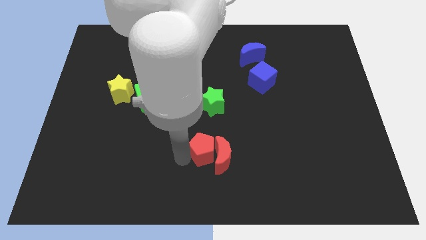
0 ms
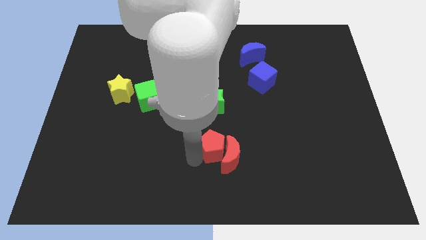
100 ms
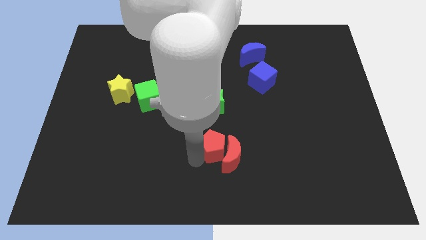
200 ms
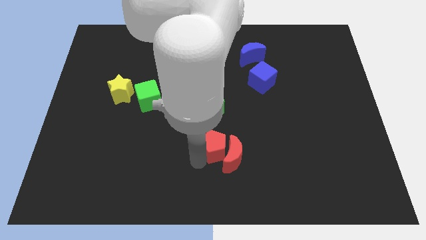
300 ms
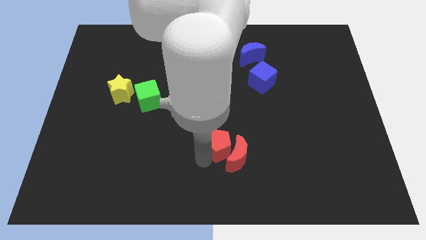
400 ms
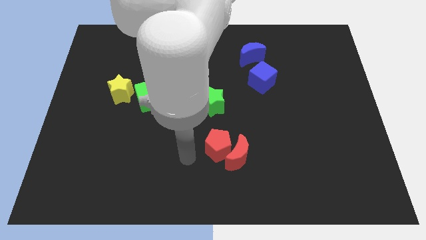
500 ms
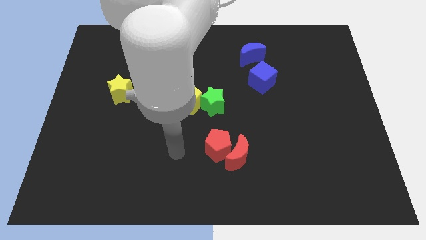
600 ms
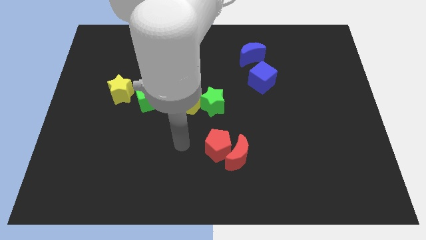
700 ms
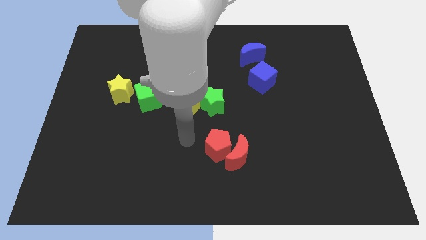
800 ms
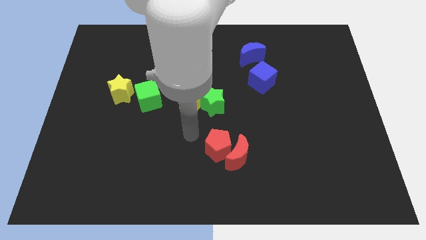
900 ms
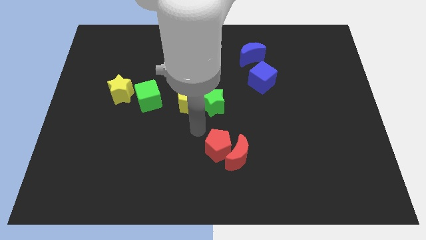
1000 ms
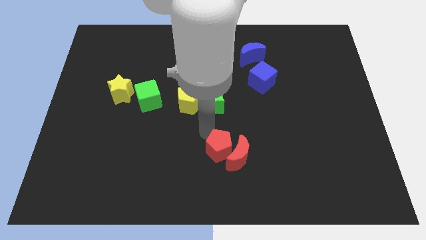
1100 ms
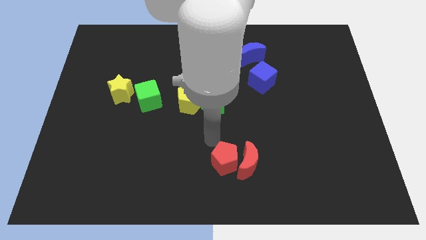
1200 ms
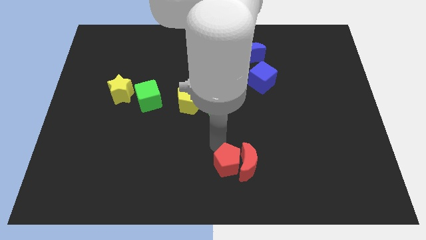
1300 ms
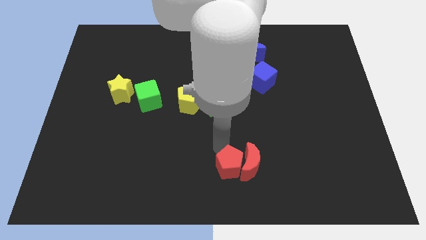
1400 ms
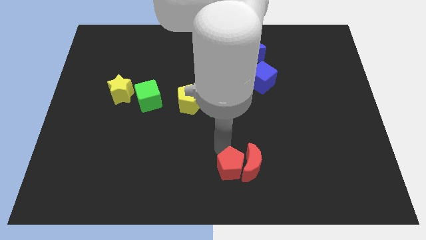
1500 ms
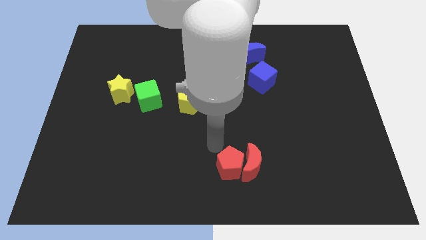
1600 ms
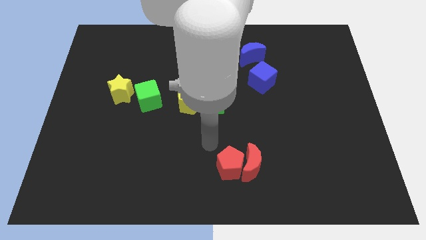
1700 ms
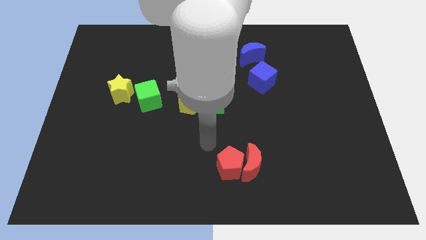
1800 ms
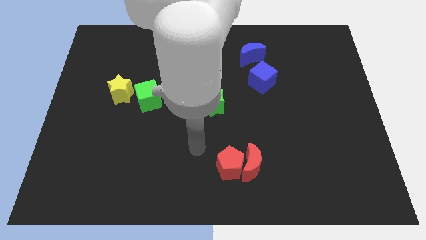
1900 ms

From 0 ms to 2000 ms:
push the red pentagon and red half moon to the right side

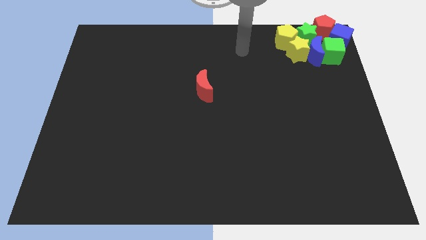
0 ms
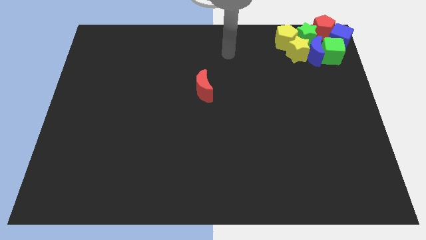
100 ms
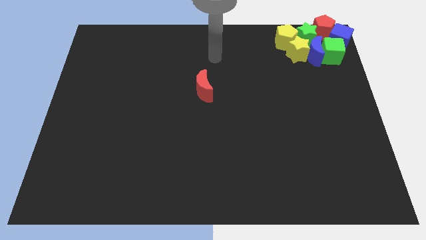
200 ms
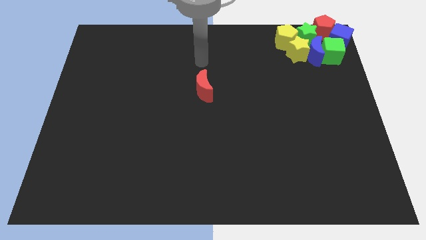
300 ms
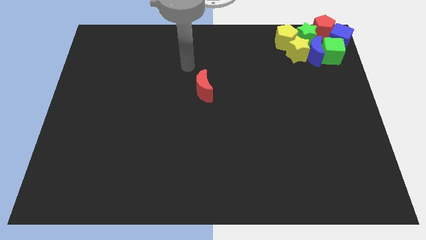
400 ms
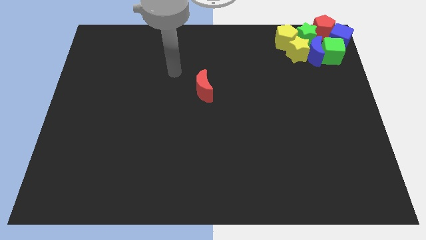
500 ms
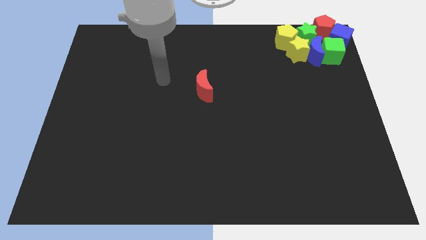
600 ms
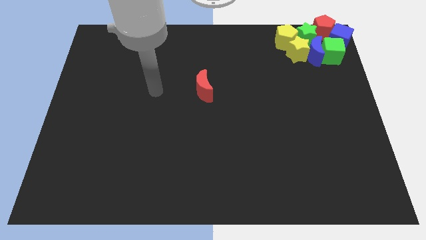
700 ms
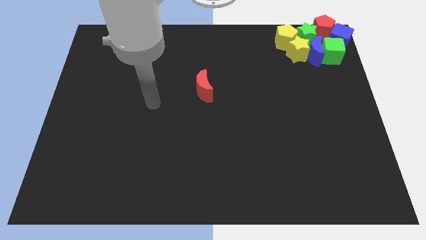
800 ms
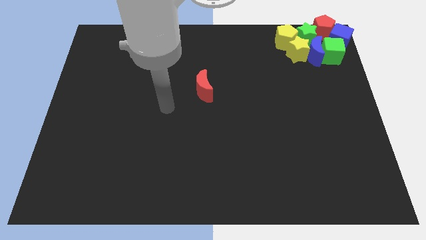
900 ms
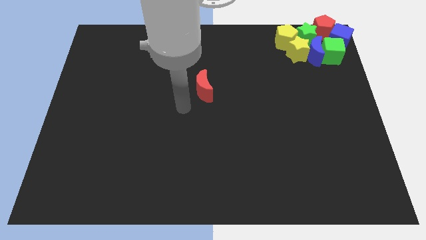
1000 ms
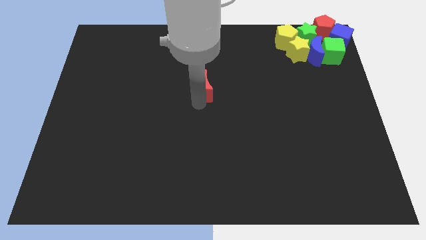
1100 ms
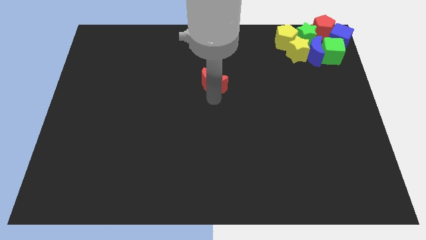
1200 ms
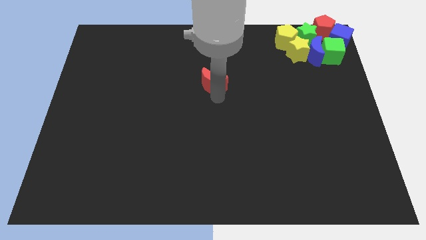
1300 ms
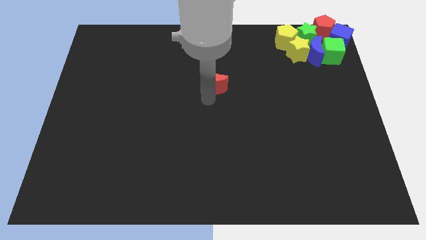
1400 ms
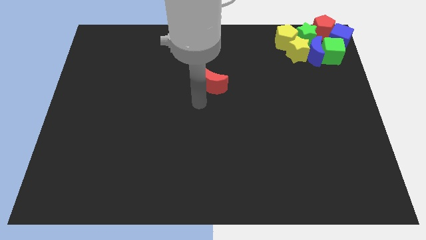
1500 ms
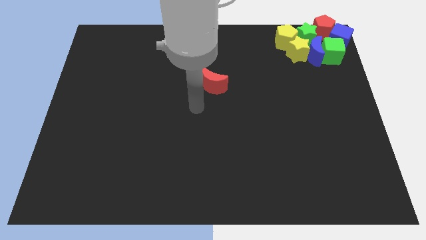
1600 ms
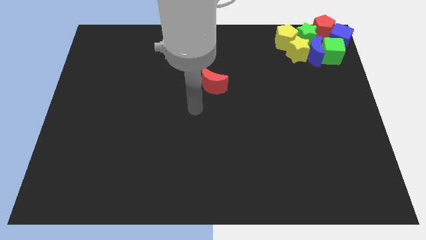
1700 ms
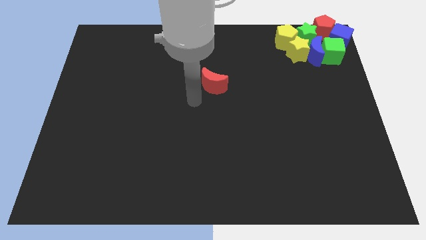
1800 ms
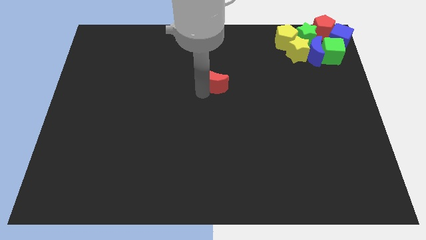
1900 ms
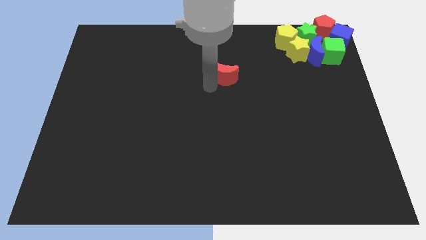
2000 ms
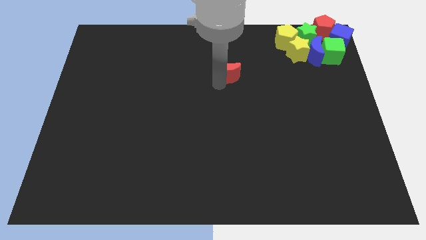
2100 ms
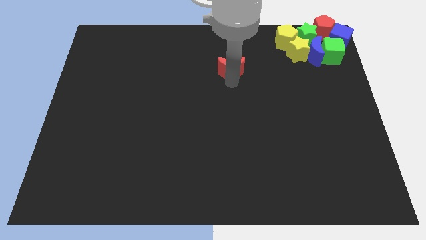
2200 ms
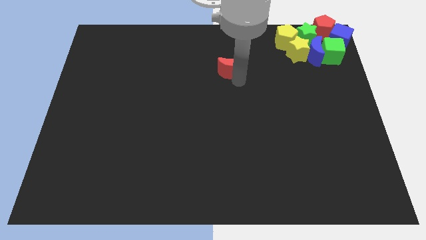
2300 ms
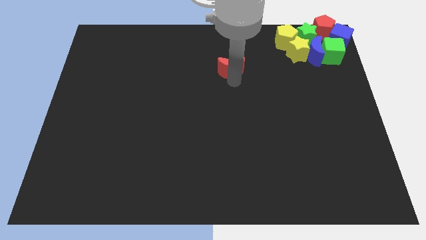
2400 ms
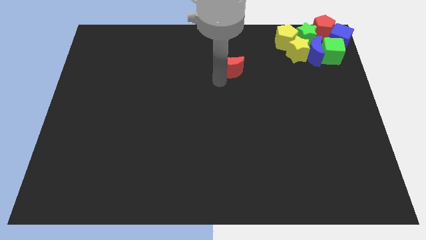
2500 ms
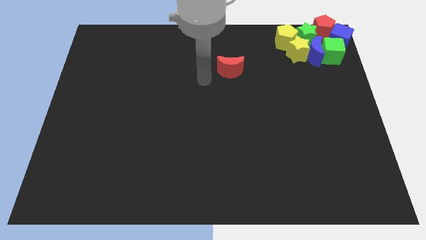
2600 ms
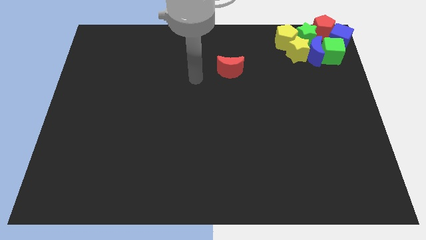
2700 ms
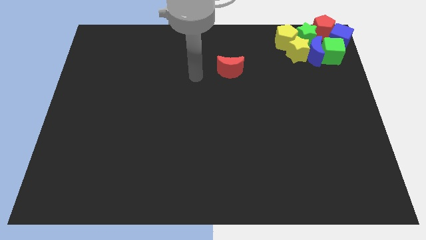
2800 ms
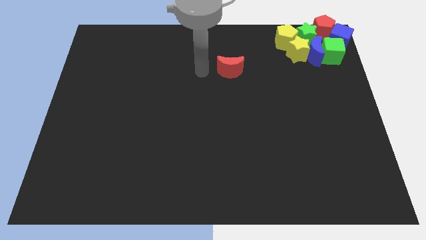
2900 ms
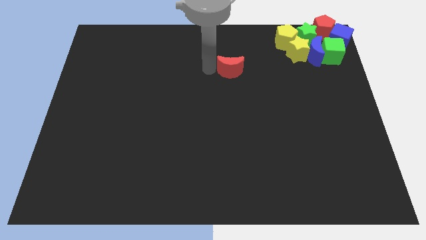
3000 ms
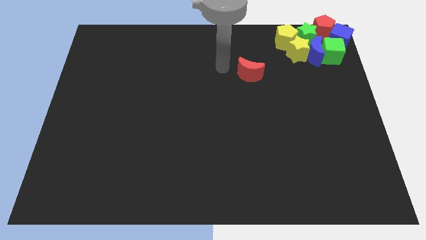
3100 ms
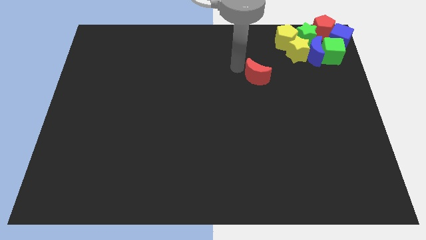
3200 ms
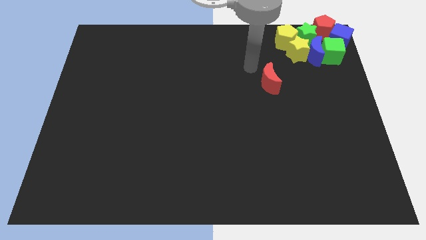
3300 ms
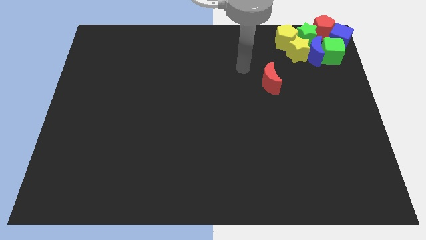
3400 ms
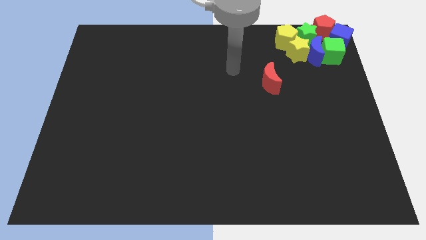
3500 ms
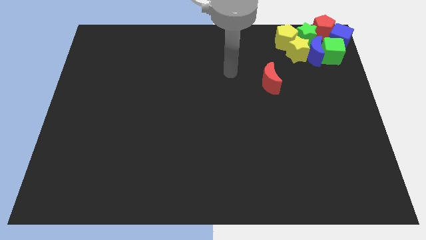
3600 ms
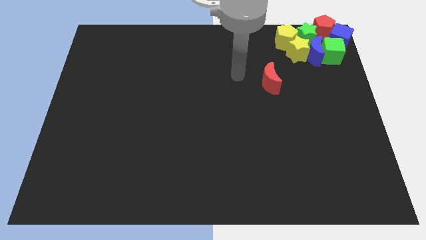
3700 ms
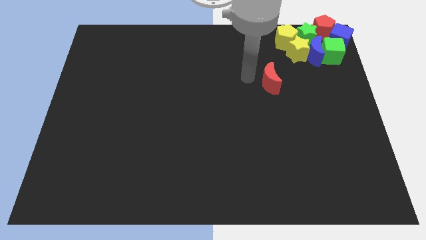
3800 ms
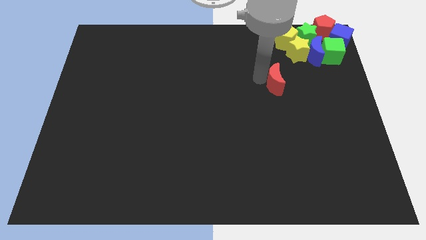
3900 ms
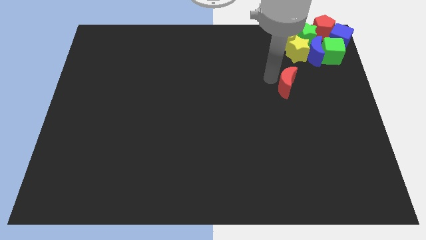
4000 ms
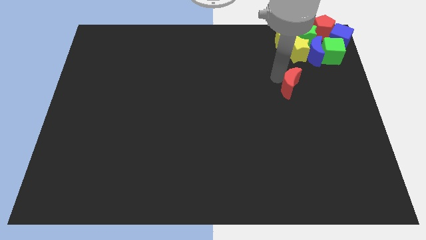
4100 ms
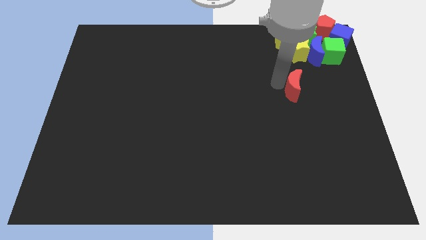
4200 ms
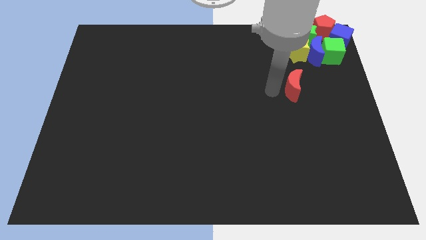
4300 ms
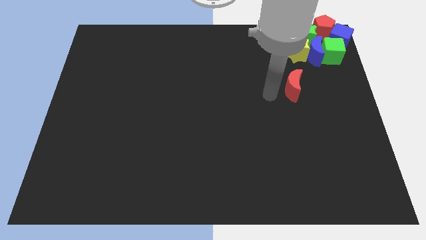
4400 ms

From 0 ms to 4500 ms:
place the red crescent below the yellow star

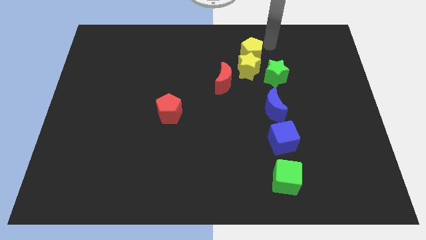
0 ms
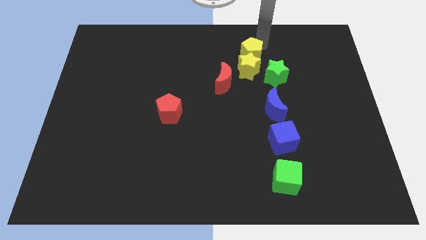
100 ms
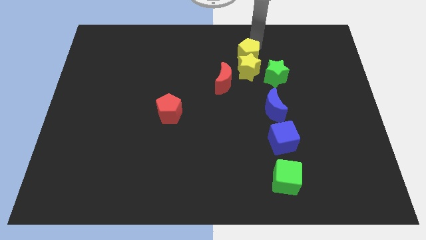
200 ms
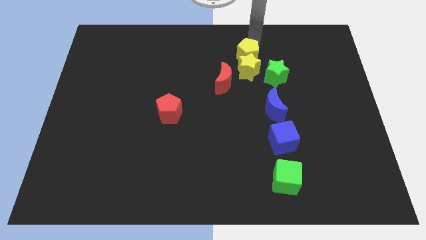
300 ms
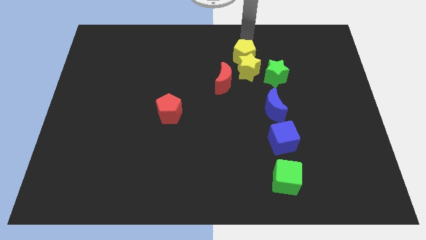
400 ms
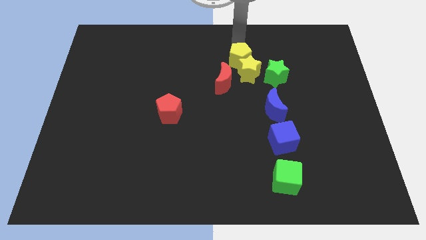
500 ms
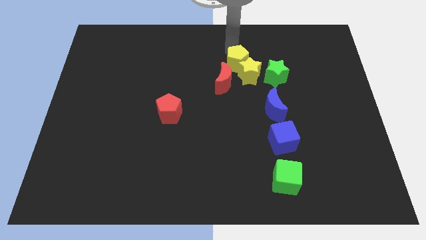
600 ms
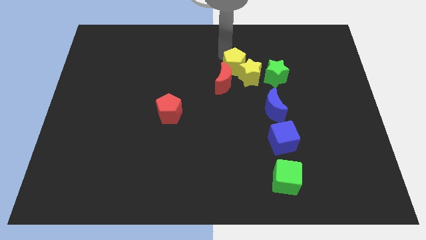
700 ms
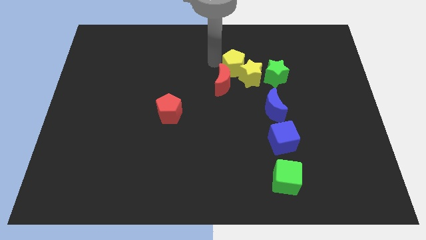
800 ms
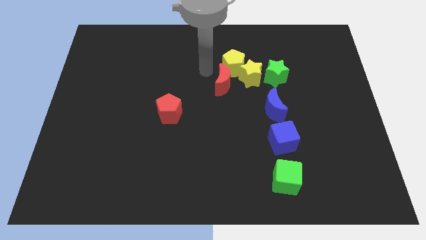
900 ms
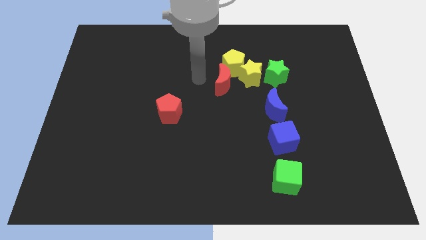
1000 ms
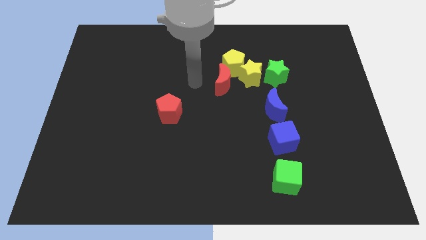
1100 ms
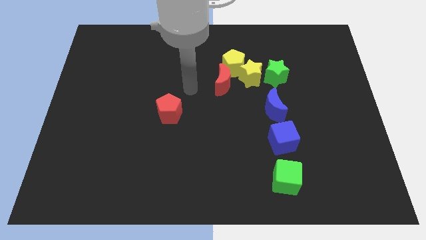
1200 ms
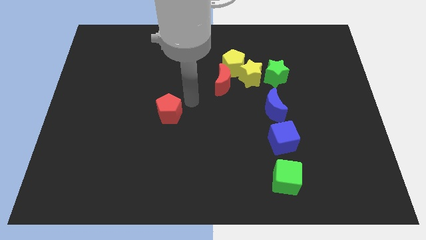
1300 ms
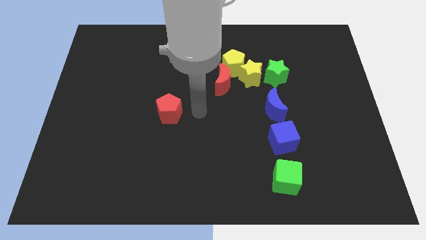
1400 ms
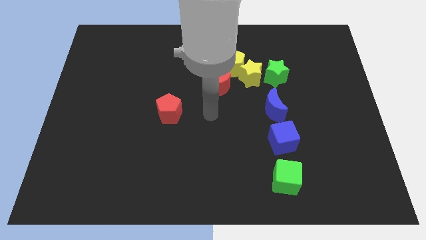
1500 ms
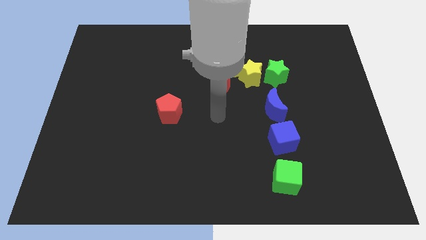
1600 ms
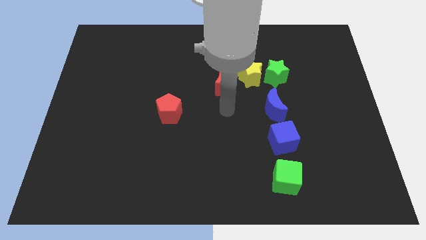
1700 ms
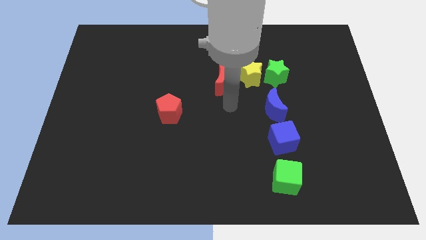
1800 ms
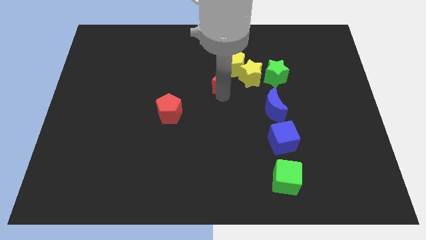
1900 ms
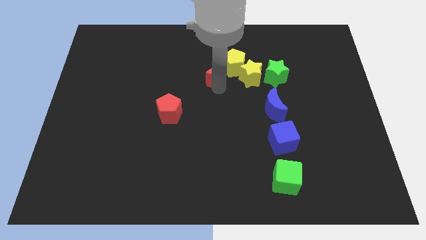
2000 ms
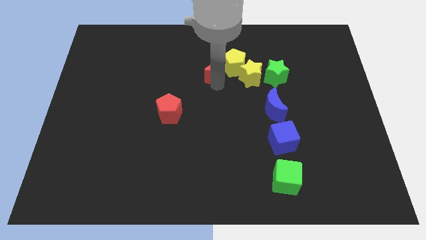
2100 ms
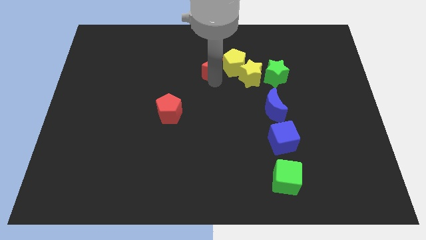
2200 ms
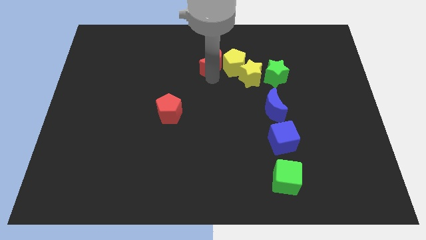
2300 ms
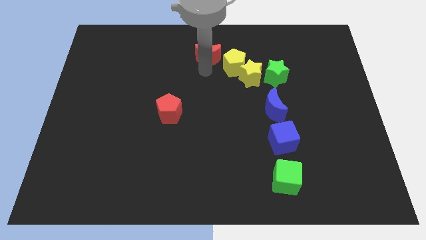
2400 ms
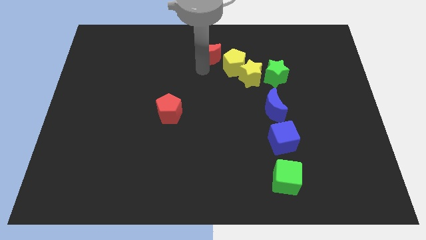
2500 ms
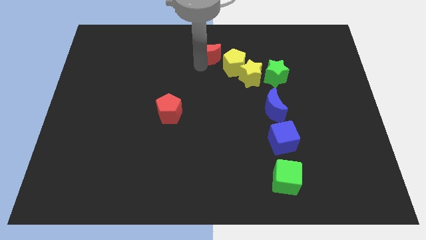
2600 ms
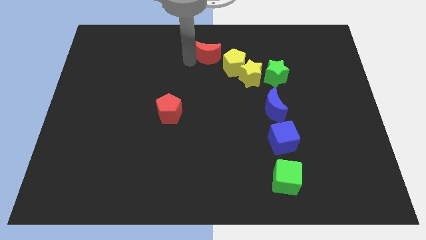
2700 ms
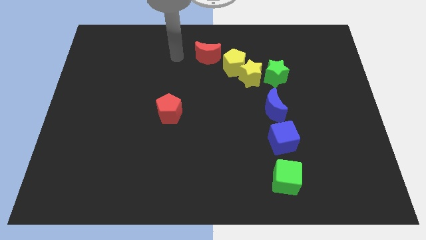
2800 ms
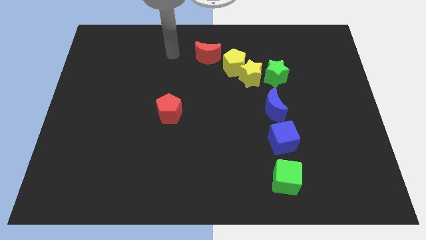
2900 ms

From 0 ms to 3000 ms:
move the red moon to the top of the board
